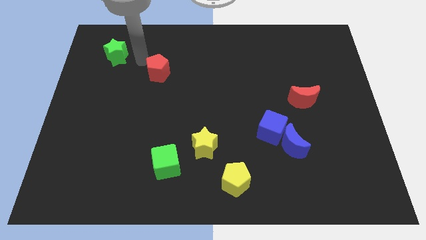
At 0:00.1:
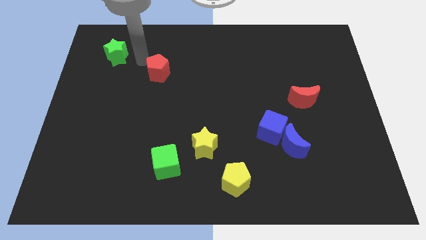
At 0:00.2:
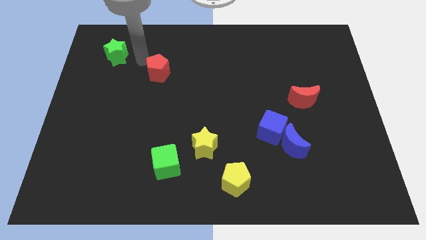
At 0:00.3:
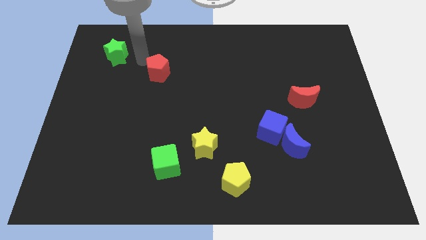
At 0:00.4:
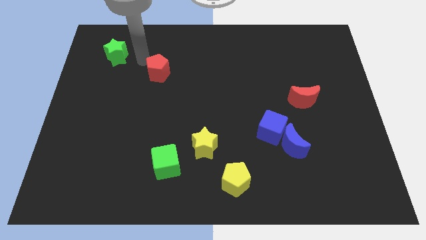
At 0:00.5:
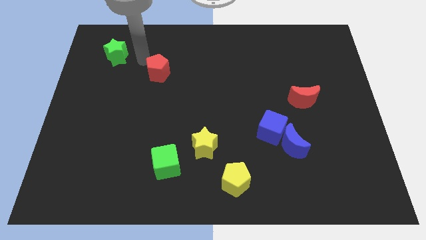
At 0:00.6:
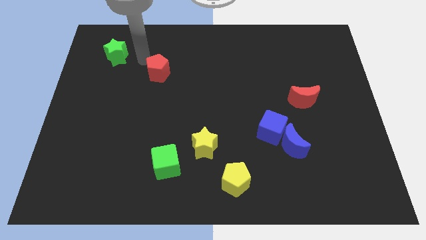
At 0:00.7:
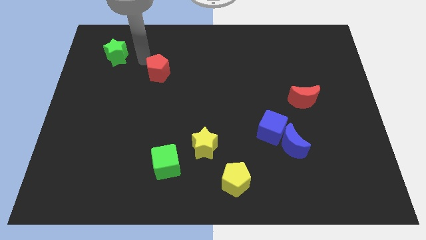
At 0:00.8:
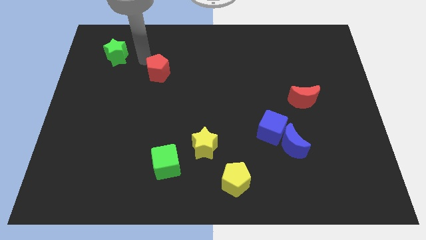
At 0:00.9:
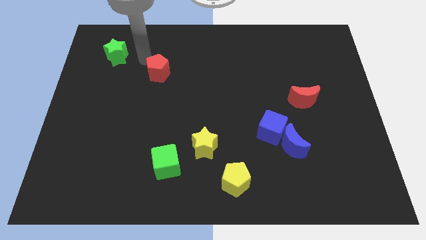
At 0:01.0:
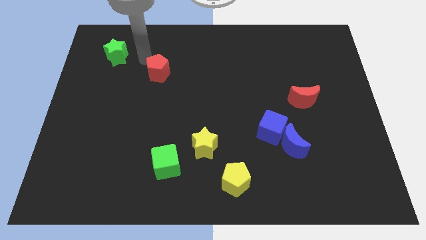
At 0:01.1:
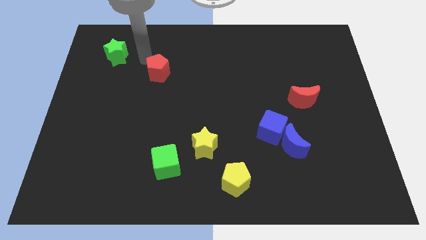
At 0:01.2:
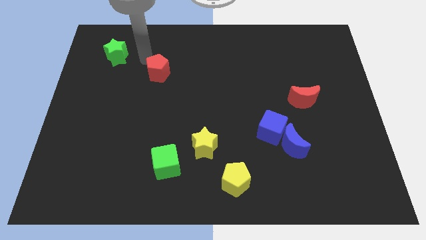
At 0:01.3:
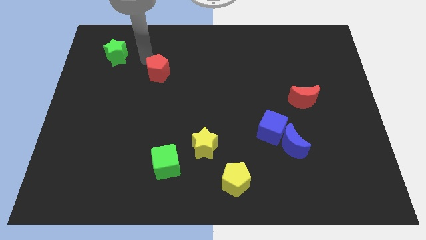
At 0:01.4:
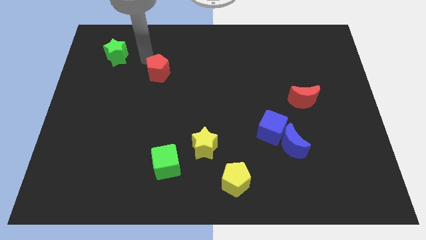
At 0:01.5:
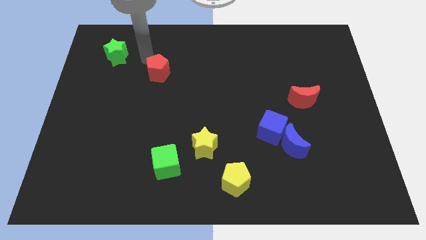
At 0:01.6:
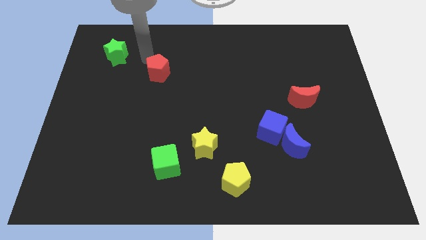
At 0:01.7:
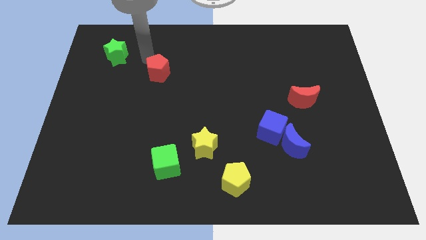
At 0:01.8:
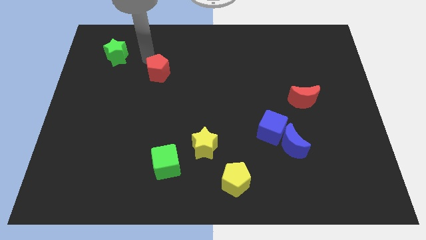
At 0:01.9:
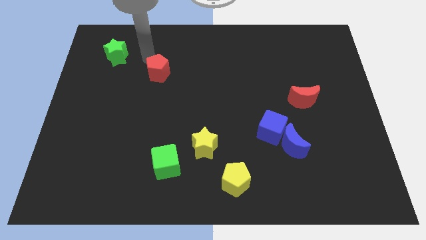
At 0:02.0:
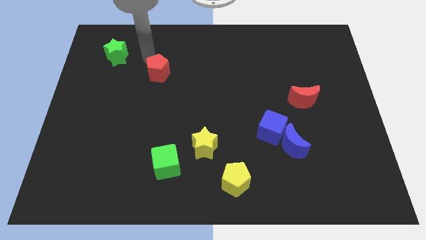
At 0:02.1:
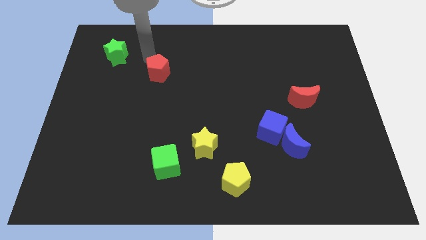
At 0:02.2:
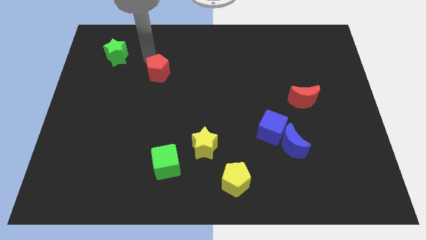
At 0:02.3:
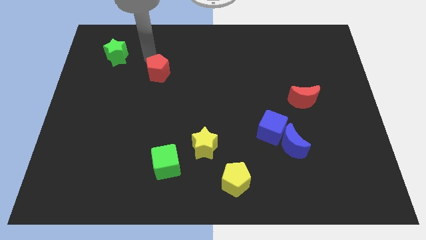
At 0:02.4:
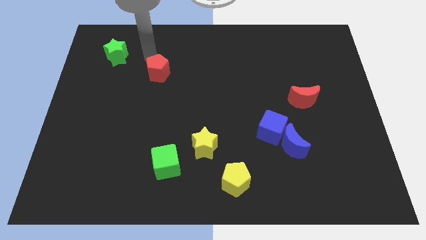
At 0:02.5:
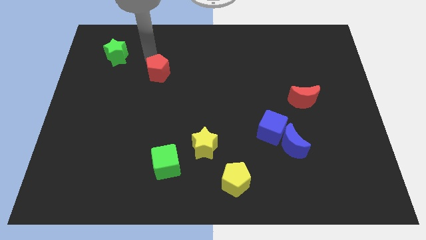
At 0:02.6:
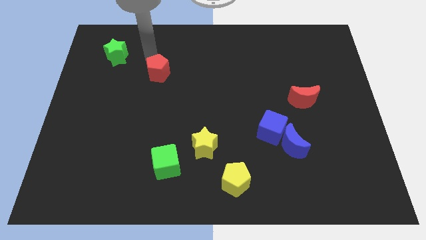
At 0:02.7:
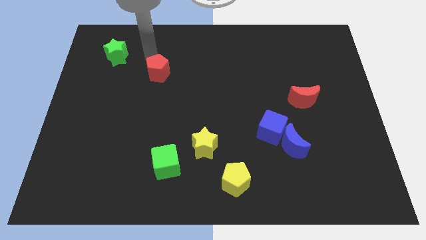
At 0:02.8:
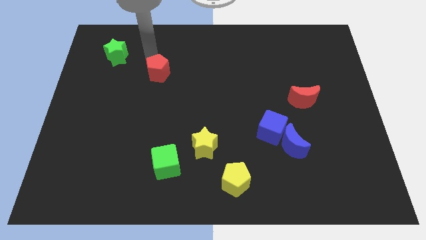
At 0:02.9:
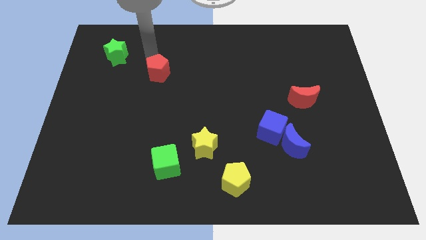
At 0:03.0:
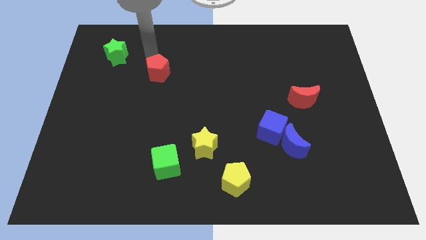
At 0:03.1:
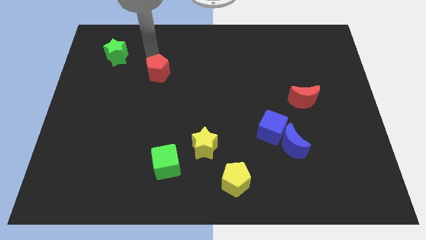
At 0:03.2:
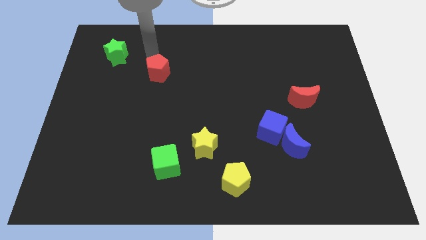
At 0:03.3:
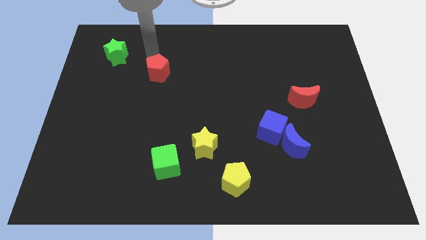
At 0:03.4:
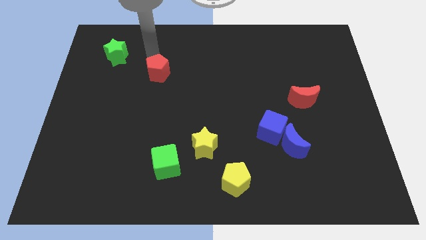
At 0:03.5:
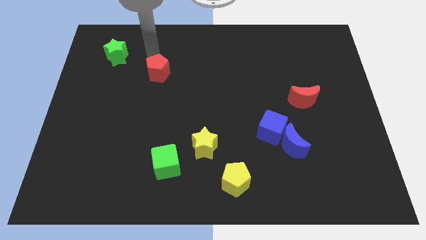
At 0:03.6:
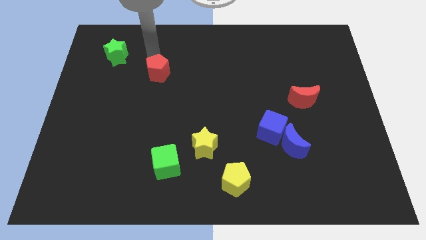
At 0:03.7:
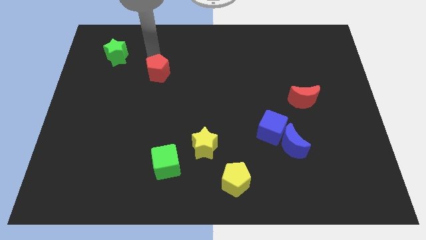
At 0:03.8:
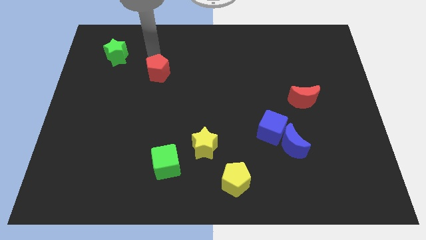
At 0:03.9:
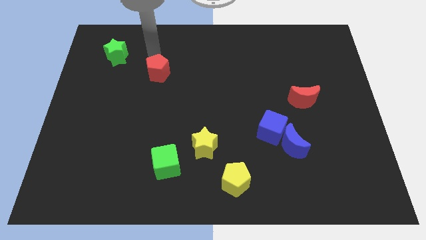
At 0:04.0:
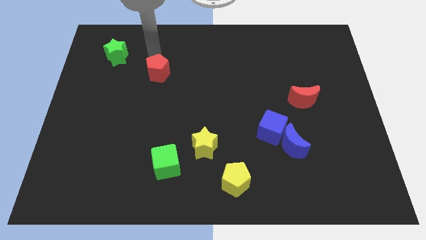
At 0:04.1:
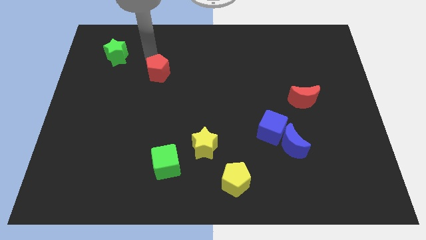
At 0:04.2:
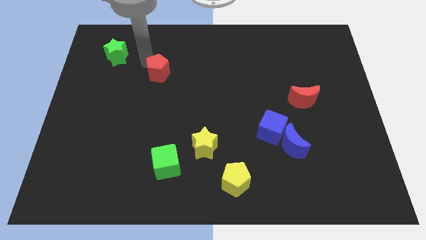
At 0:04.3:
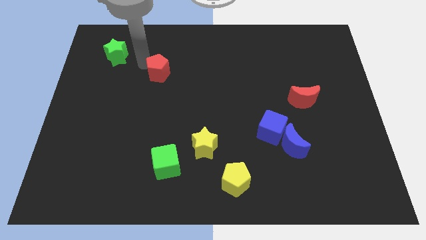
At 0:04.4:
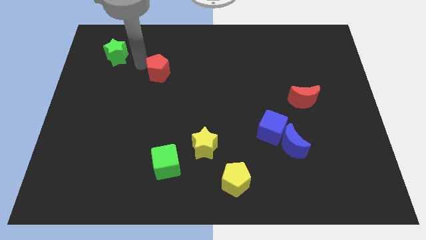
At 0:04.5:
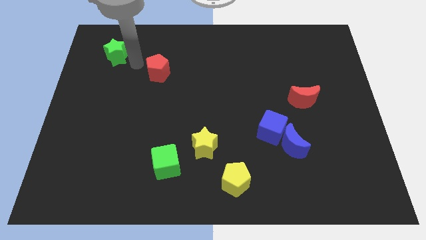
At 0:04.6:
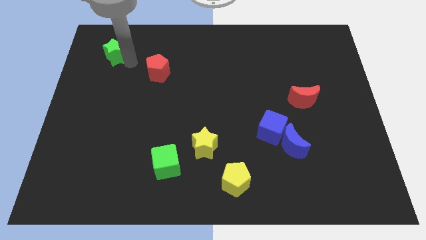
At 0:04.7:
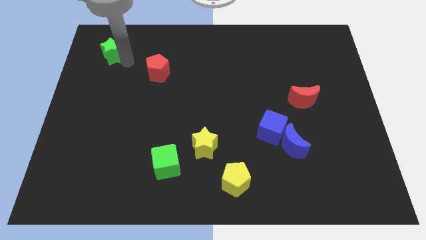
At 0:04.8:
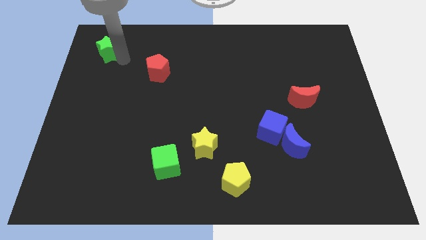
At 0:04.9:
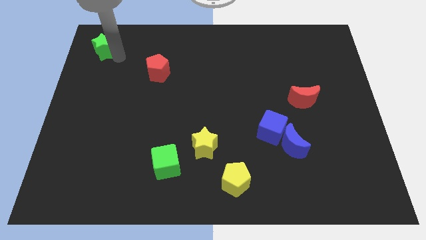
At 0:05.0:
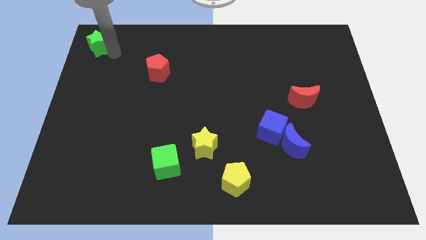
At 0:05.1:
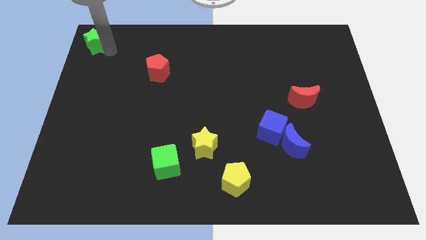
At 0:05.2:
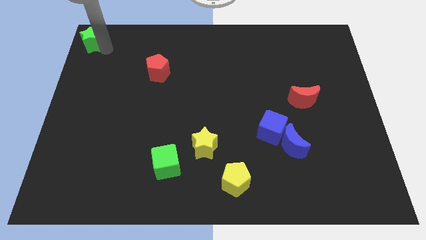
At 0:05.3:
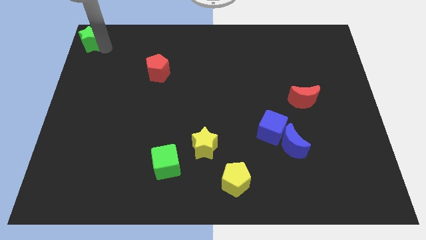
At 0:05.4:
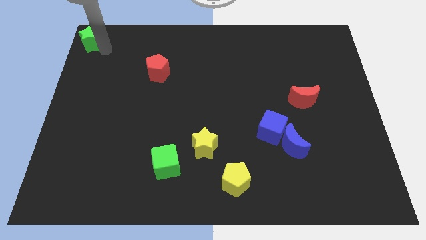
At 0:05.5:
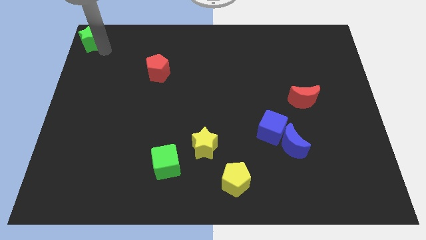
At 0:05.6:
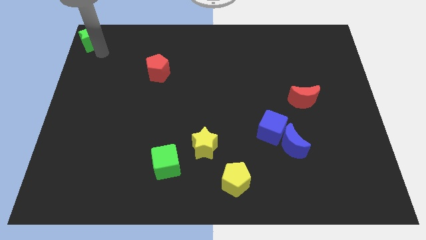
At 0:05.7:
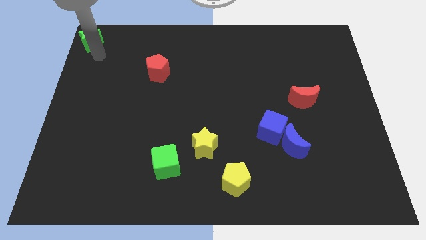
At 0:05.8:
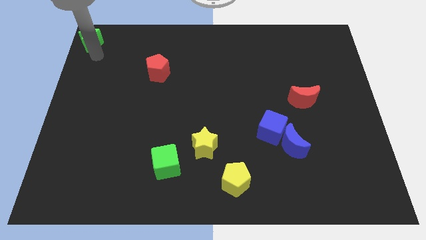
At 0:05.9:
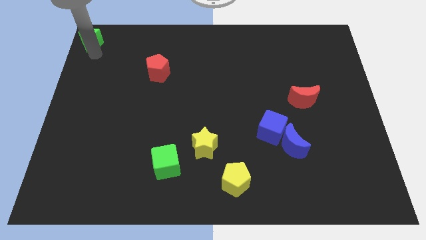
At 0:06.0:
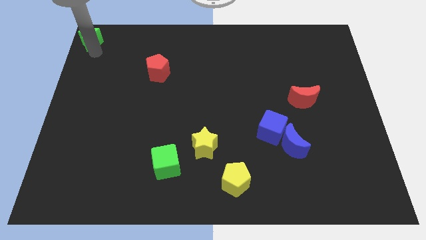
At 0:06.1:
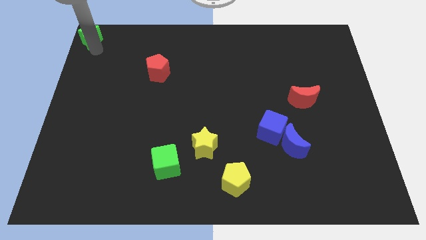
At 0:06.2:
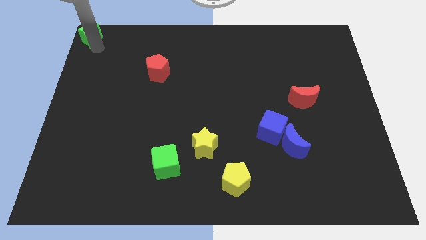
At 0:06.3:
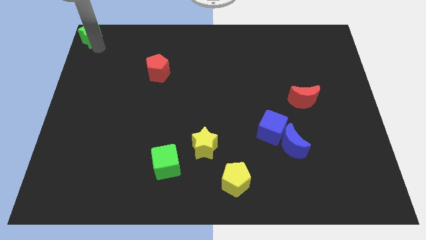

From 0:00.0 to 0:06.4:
move the green star to the top left corner of board

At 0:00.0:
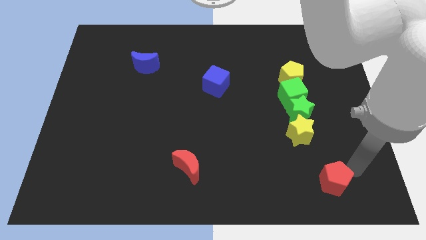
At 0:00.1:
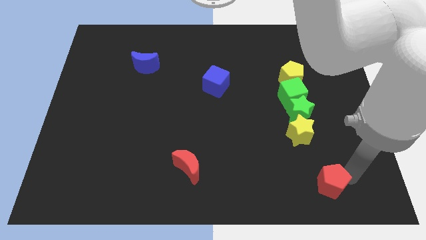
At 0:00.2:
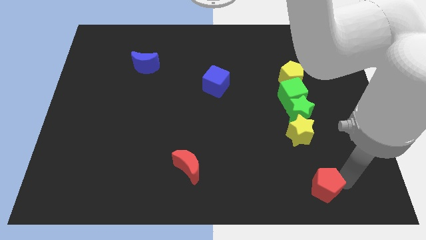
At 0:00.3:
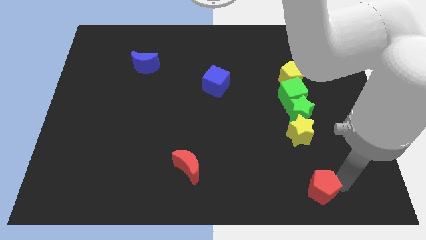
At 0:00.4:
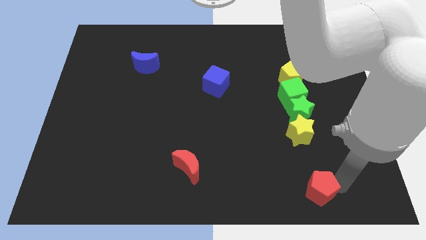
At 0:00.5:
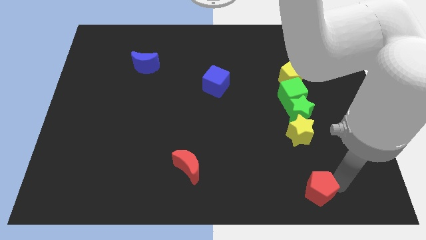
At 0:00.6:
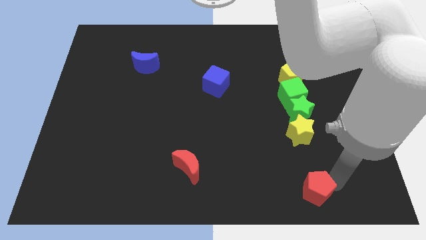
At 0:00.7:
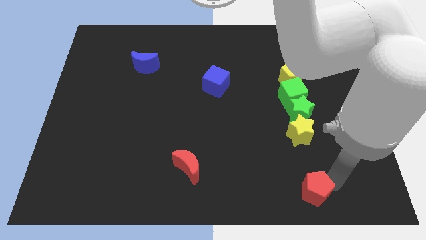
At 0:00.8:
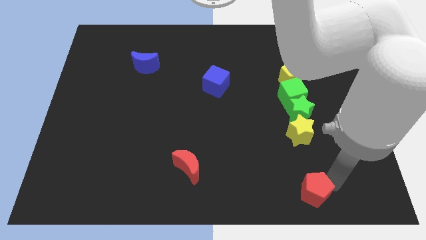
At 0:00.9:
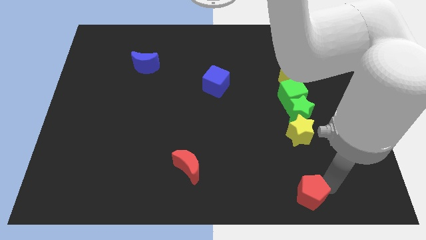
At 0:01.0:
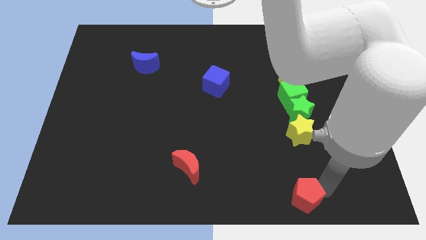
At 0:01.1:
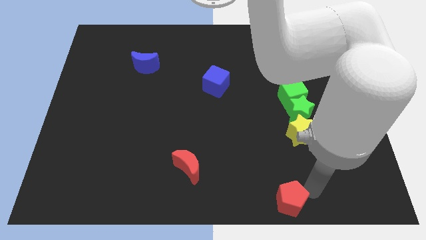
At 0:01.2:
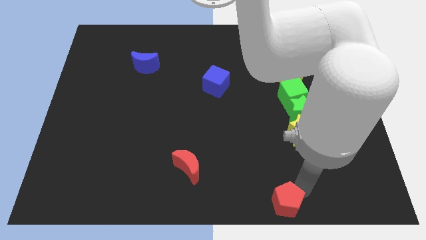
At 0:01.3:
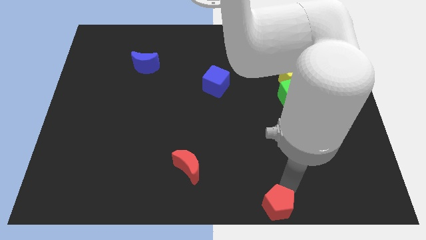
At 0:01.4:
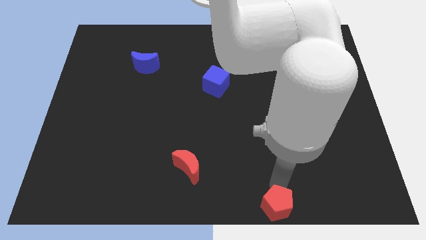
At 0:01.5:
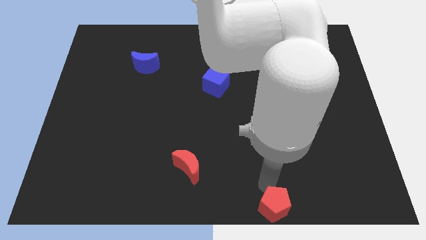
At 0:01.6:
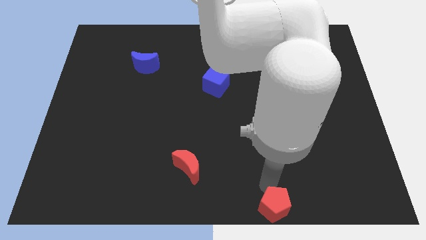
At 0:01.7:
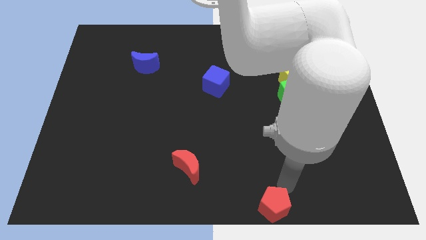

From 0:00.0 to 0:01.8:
move the red pentagon to the bottom side of the table

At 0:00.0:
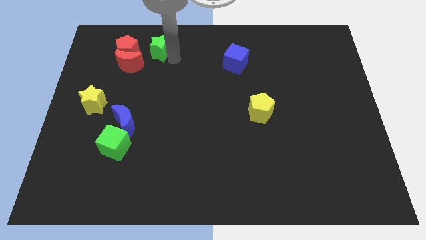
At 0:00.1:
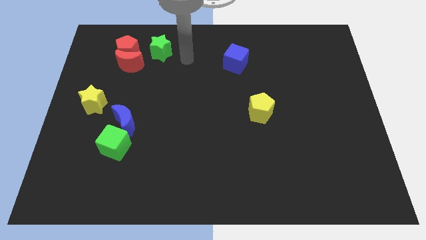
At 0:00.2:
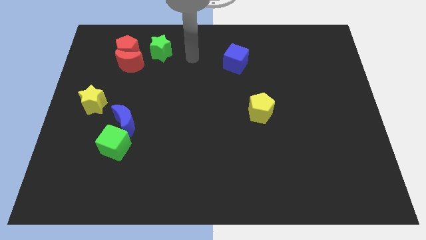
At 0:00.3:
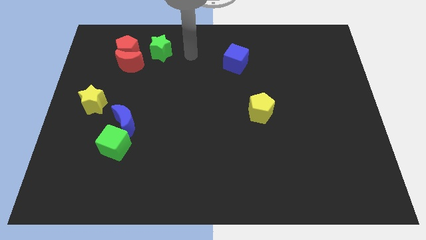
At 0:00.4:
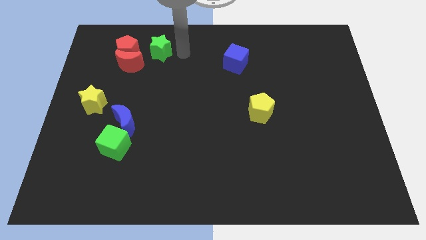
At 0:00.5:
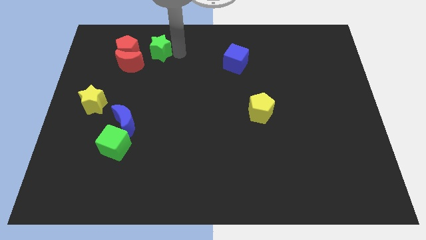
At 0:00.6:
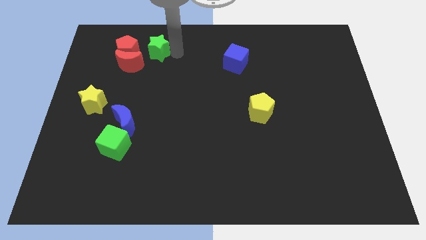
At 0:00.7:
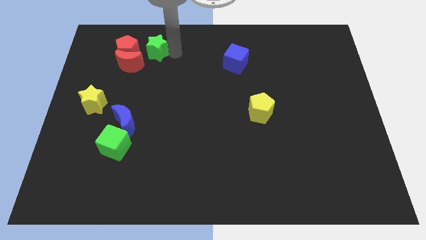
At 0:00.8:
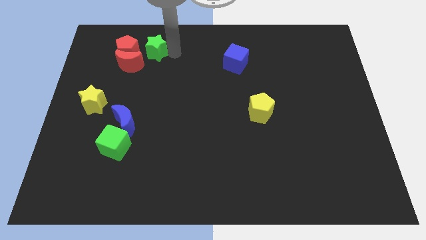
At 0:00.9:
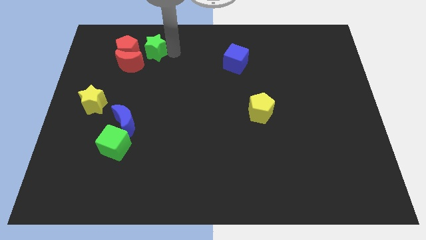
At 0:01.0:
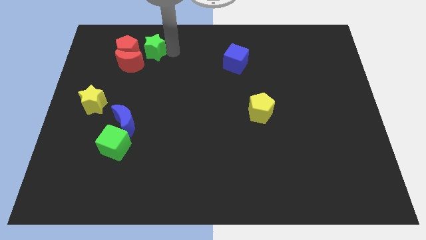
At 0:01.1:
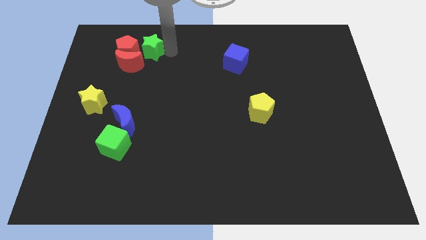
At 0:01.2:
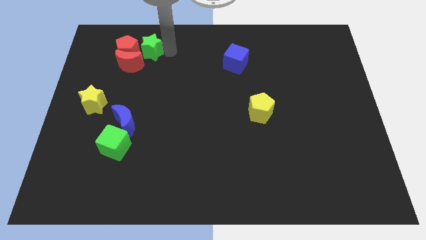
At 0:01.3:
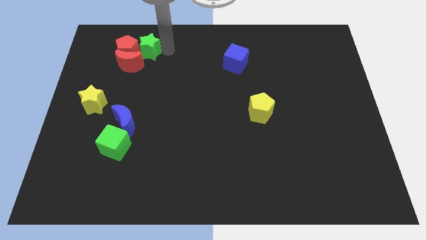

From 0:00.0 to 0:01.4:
move the green star to the right of the red pentagon
